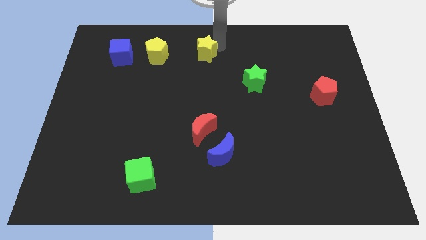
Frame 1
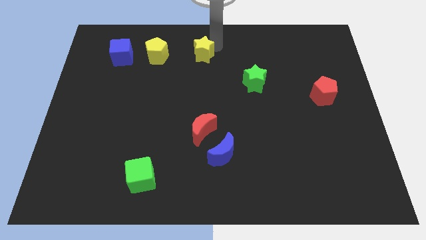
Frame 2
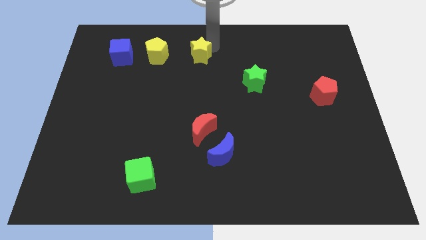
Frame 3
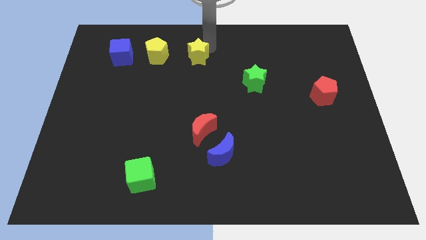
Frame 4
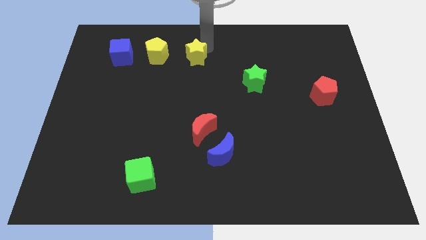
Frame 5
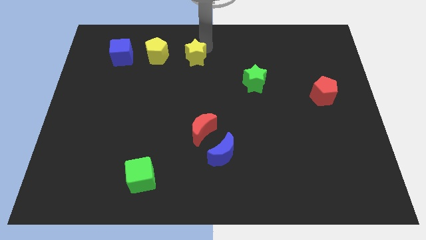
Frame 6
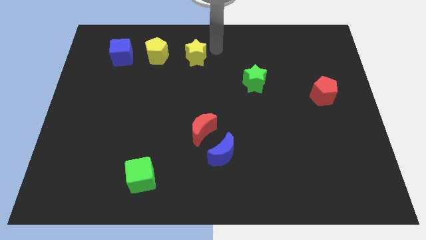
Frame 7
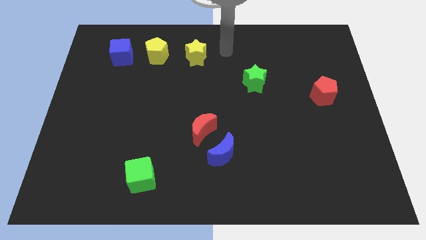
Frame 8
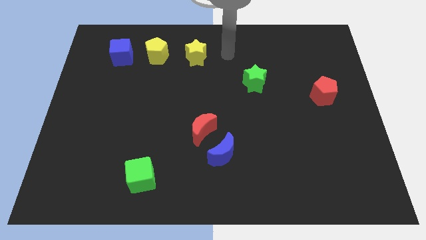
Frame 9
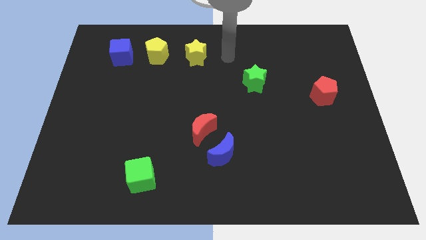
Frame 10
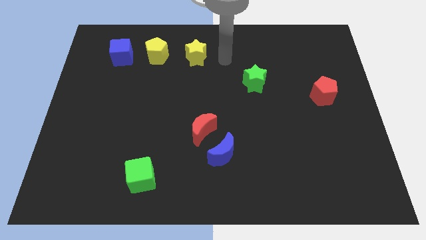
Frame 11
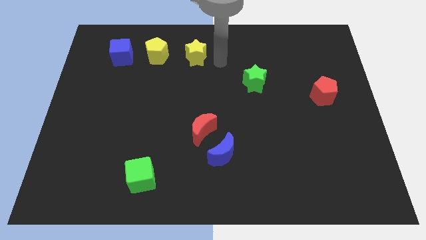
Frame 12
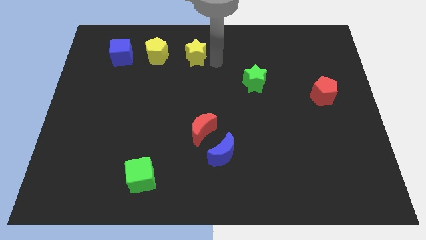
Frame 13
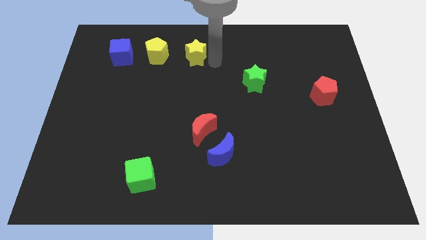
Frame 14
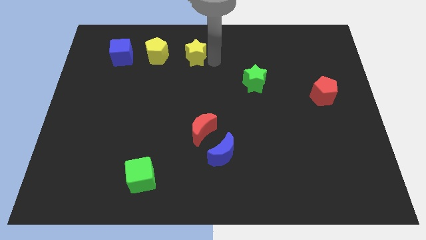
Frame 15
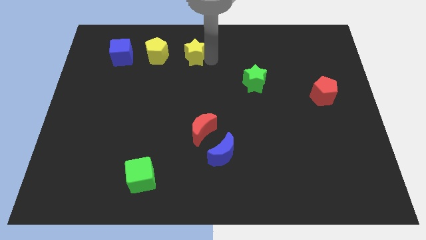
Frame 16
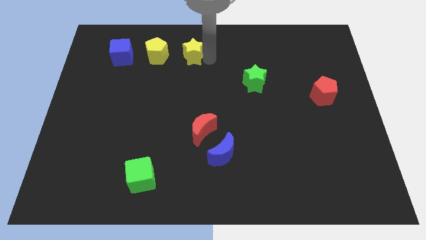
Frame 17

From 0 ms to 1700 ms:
push the yellow star close to the yellow pentagon

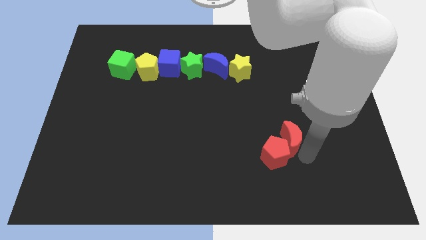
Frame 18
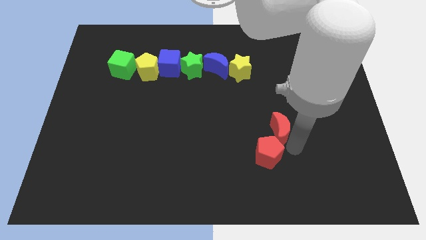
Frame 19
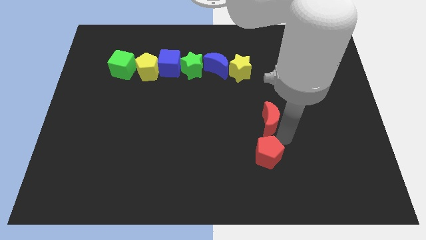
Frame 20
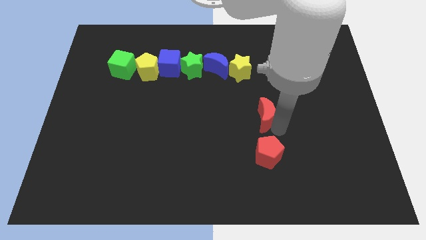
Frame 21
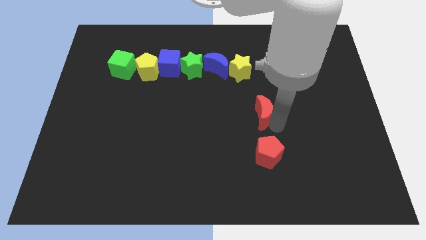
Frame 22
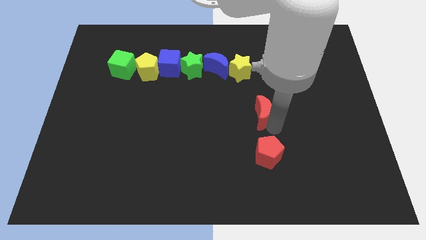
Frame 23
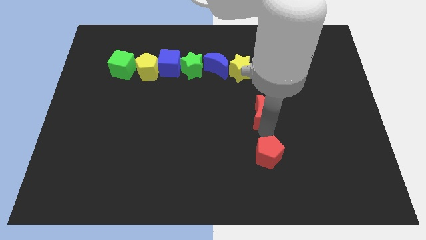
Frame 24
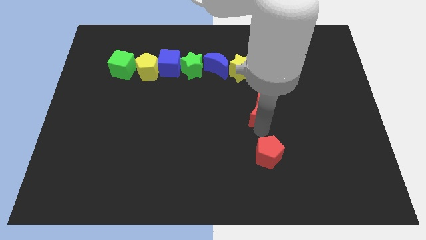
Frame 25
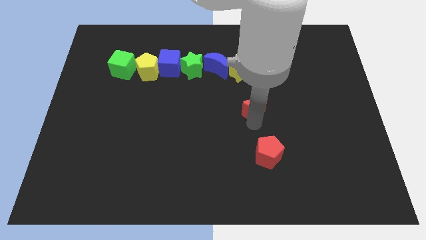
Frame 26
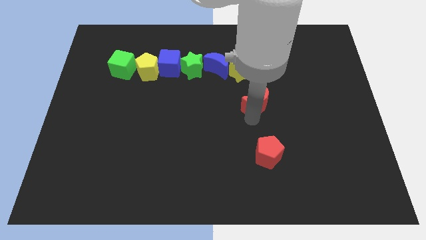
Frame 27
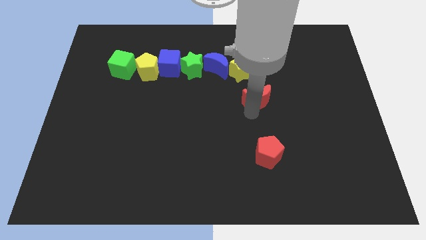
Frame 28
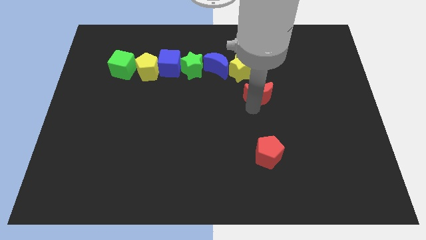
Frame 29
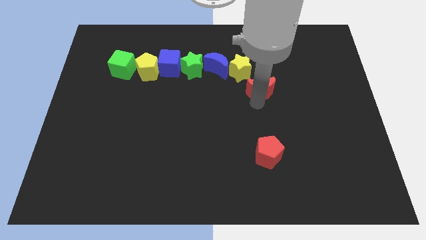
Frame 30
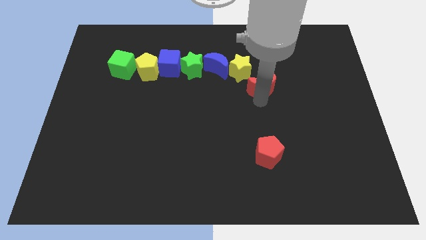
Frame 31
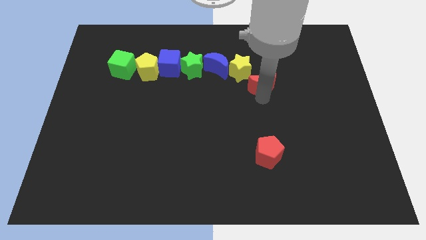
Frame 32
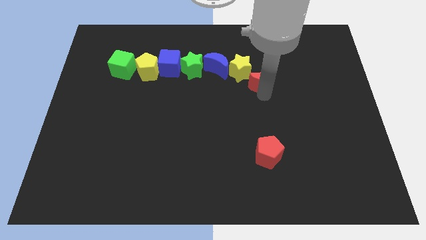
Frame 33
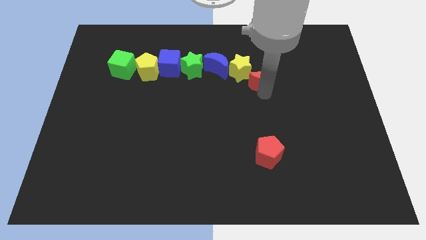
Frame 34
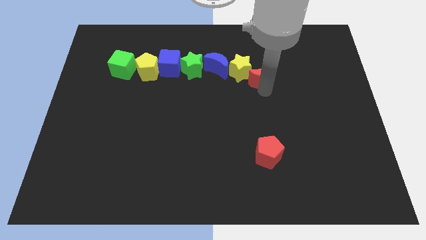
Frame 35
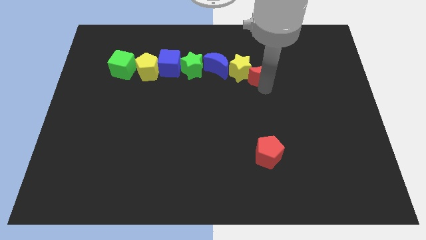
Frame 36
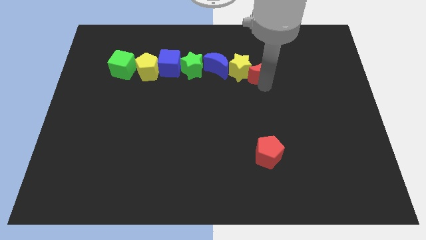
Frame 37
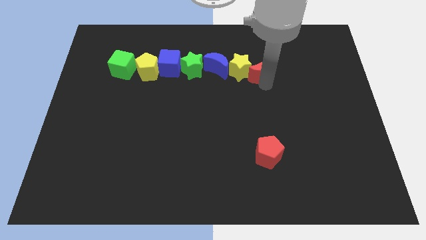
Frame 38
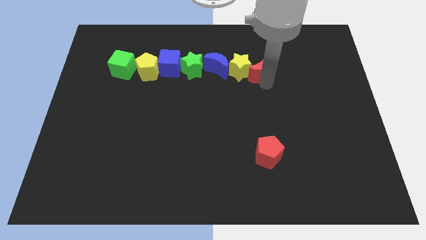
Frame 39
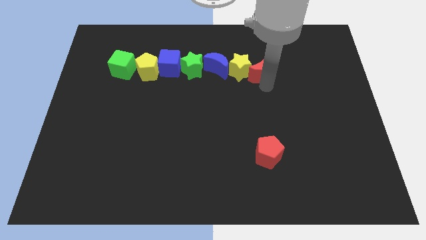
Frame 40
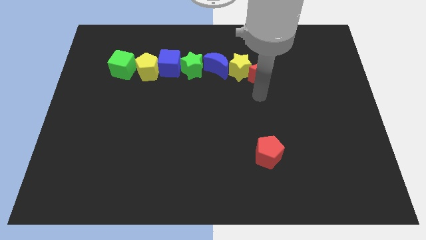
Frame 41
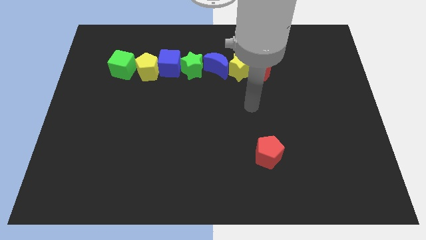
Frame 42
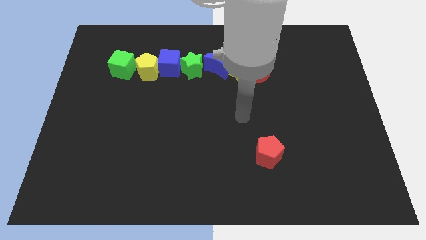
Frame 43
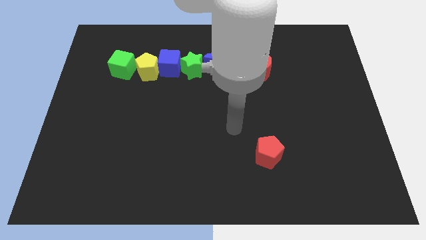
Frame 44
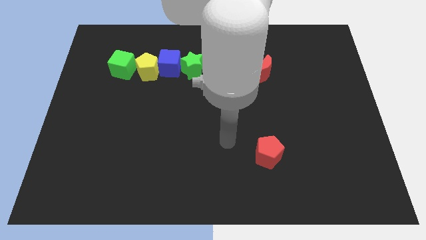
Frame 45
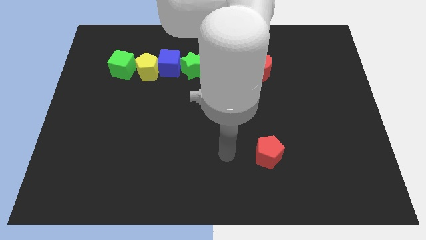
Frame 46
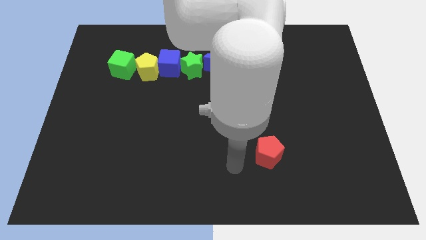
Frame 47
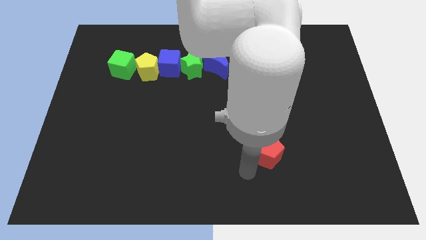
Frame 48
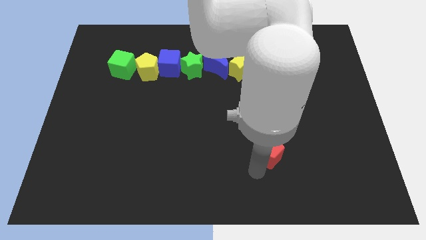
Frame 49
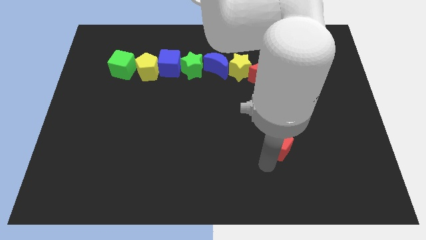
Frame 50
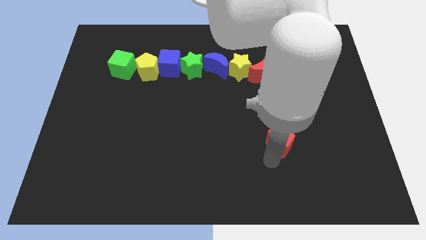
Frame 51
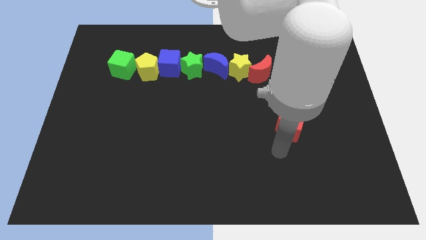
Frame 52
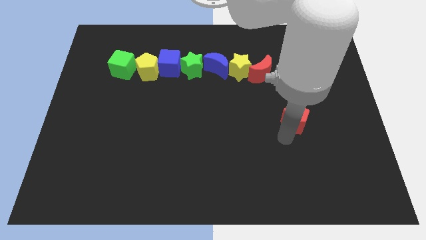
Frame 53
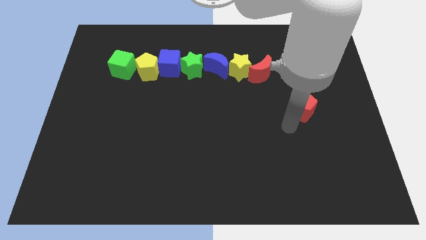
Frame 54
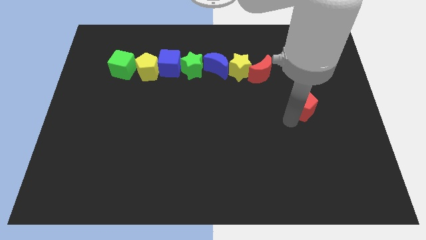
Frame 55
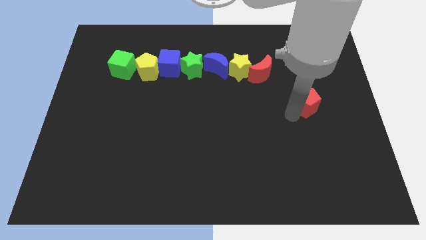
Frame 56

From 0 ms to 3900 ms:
slide the red moon and the red pentagon diagonal to each other

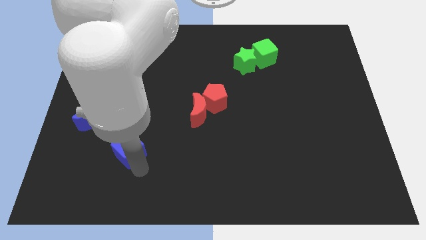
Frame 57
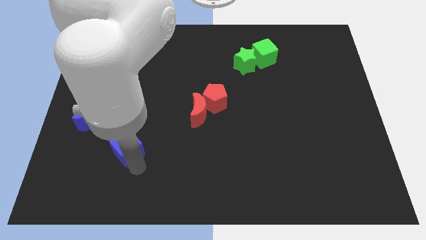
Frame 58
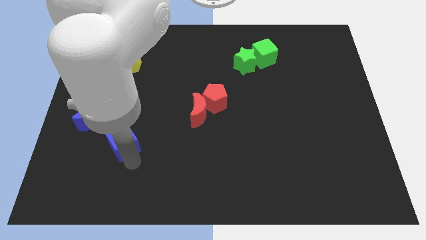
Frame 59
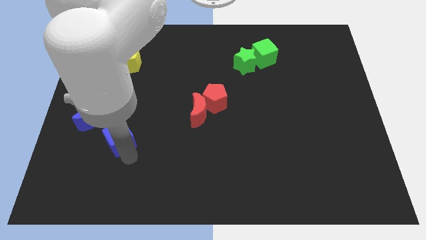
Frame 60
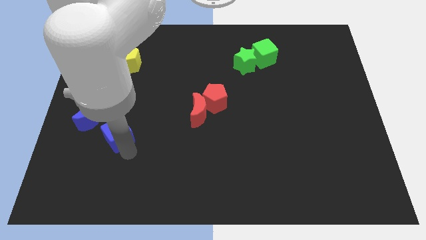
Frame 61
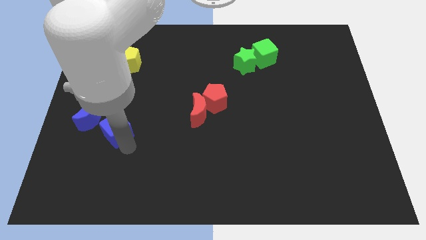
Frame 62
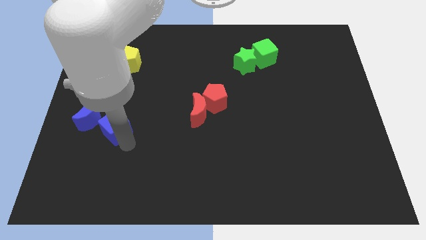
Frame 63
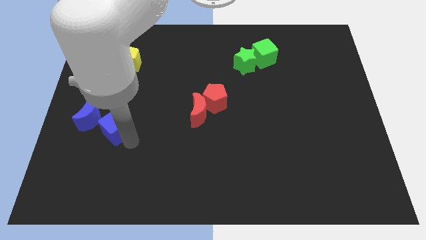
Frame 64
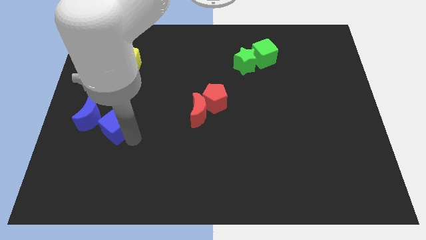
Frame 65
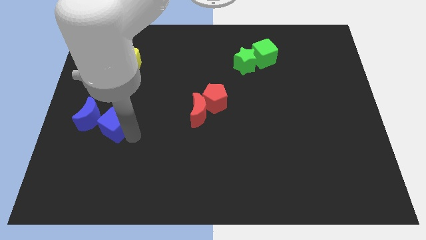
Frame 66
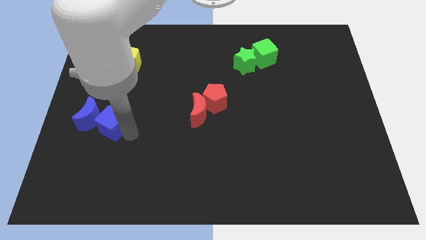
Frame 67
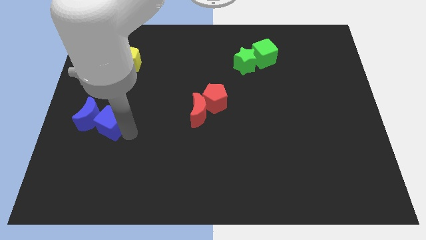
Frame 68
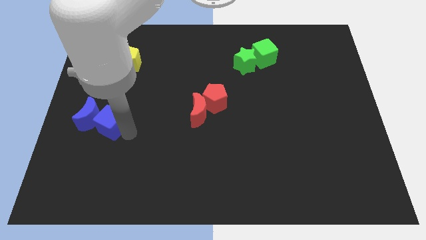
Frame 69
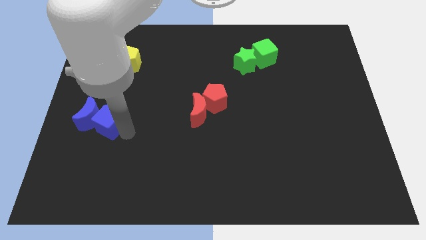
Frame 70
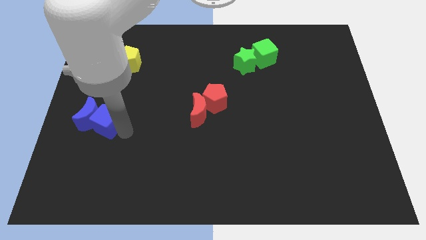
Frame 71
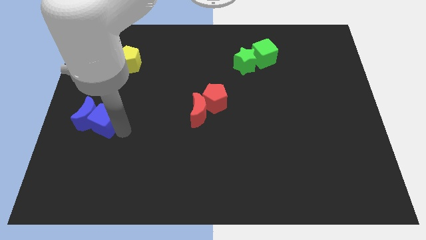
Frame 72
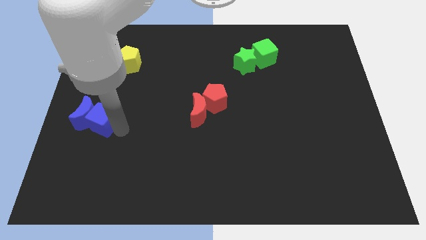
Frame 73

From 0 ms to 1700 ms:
push blue cube into the blue moon

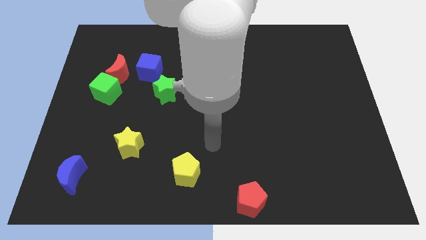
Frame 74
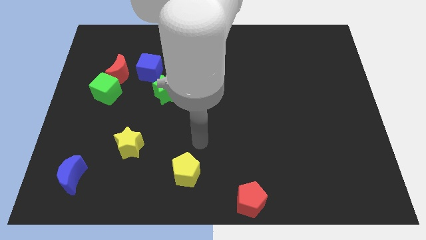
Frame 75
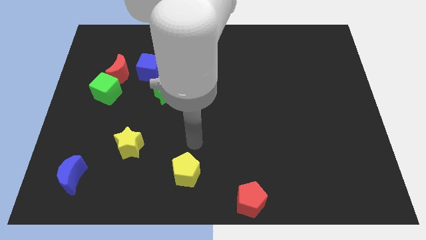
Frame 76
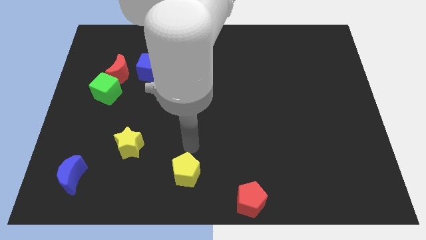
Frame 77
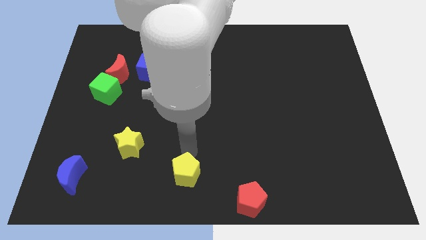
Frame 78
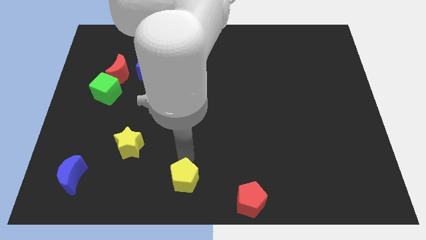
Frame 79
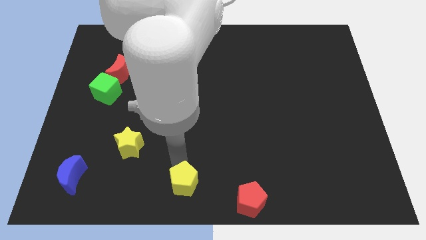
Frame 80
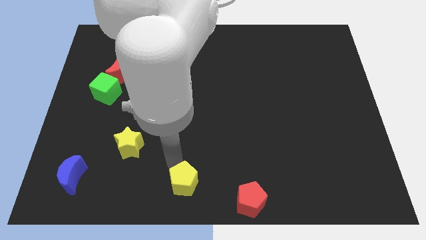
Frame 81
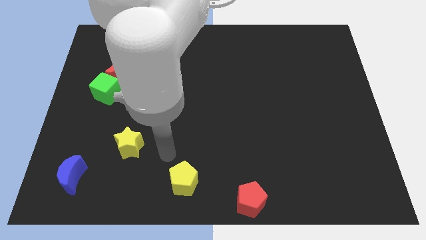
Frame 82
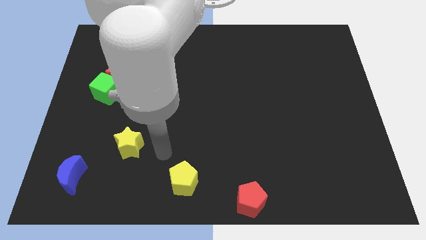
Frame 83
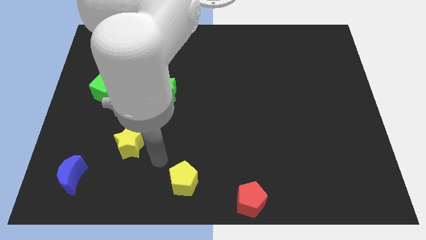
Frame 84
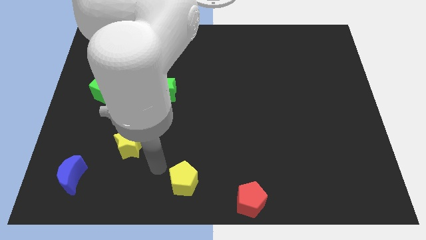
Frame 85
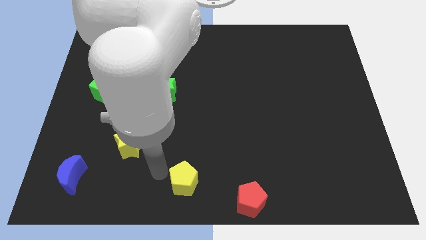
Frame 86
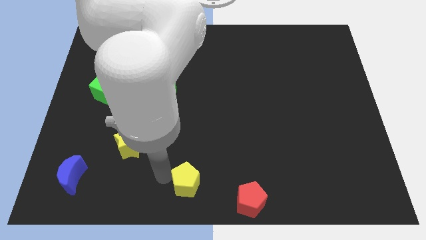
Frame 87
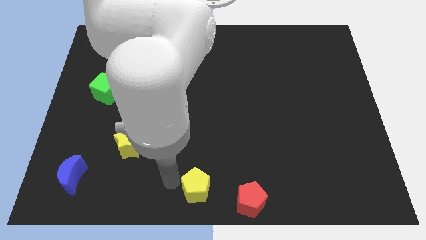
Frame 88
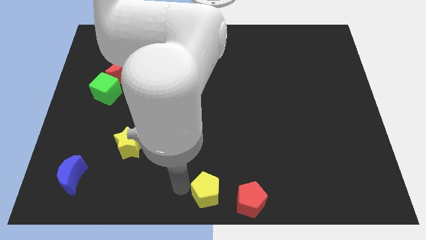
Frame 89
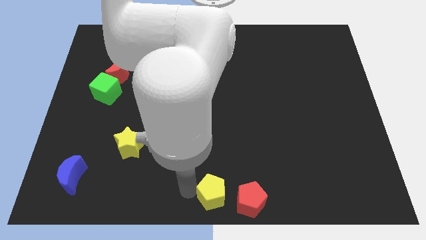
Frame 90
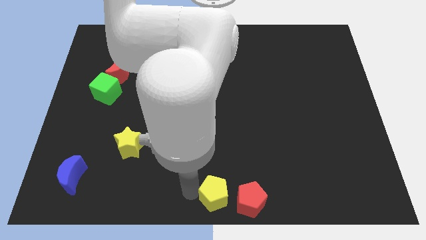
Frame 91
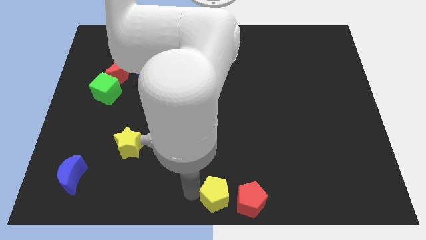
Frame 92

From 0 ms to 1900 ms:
move the yellow pentagon at the bottom center
